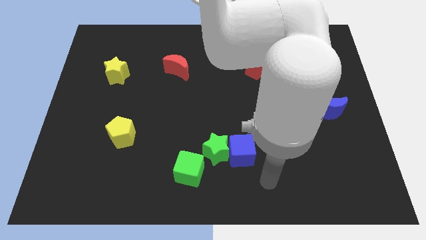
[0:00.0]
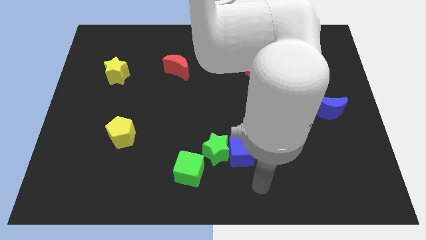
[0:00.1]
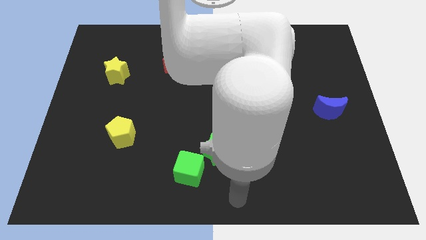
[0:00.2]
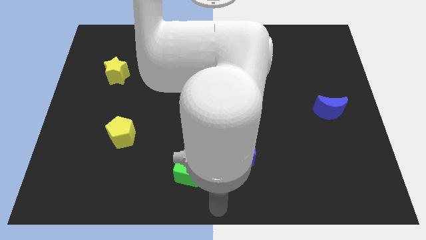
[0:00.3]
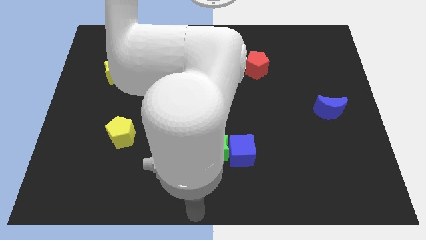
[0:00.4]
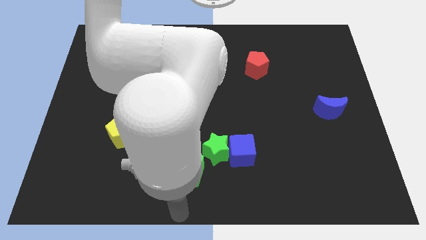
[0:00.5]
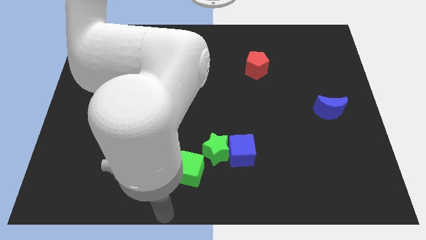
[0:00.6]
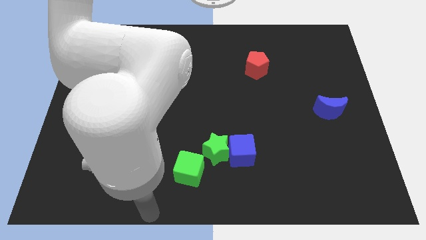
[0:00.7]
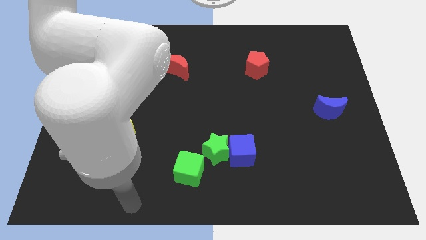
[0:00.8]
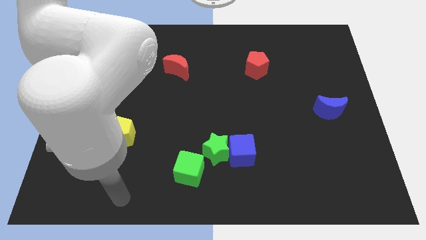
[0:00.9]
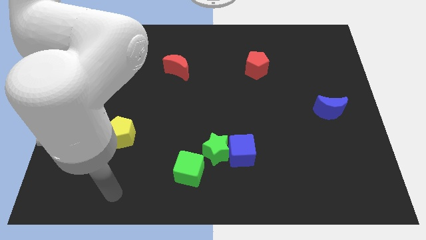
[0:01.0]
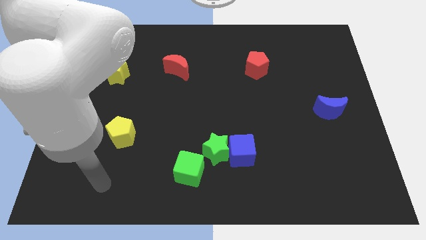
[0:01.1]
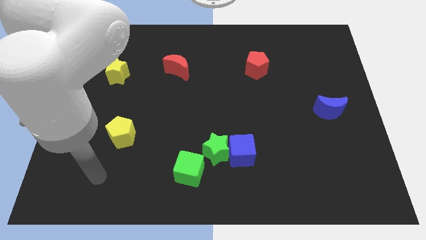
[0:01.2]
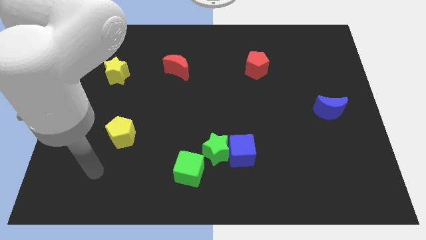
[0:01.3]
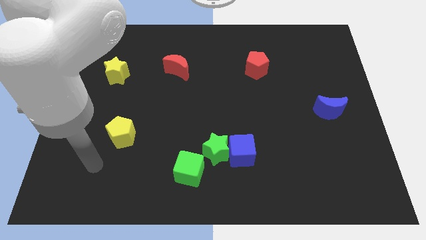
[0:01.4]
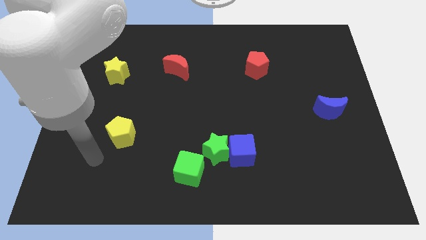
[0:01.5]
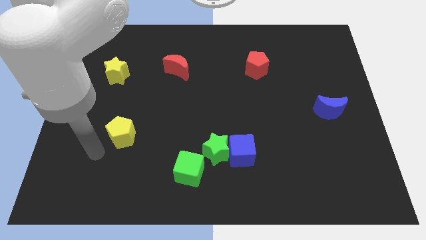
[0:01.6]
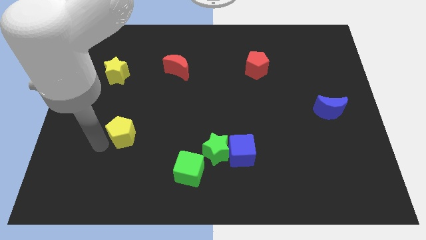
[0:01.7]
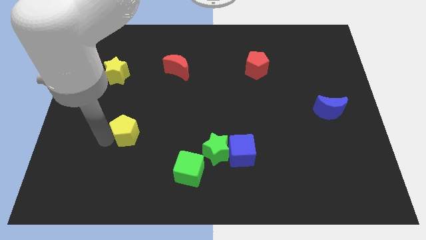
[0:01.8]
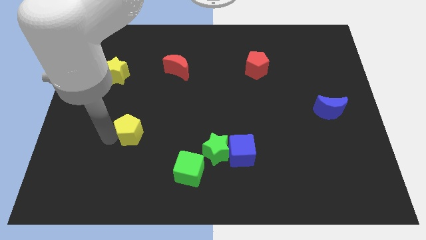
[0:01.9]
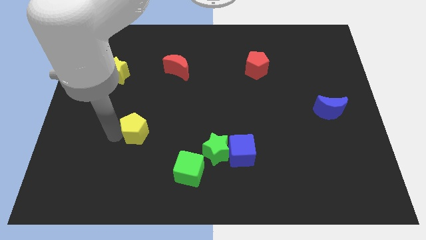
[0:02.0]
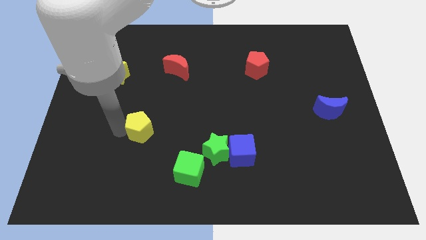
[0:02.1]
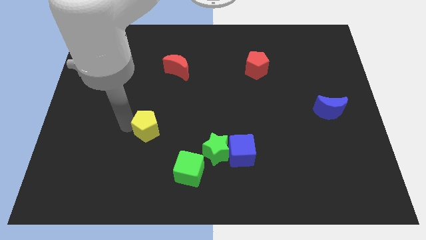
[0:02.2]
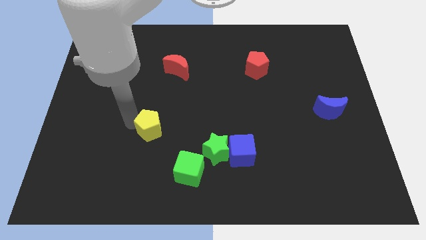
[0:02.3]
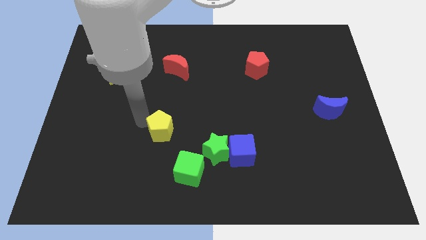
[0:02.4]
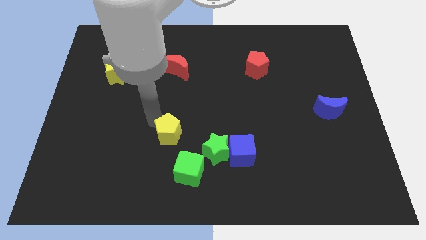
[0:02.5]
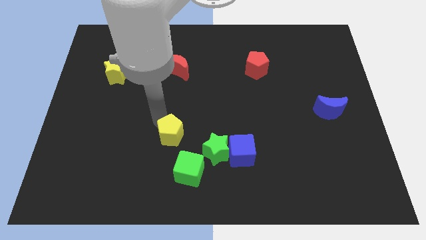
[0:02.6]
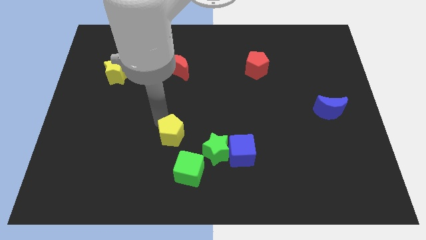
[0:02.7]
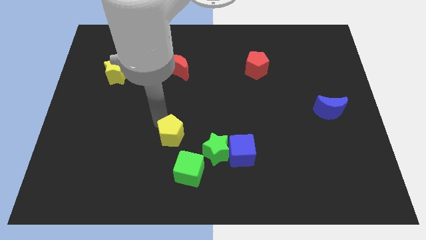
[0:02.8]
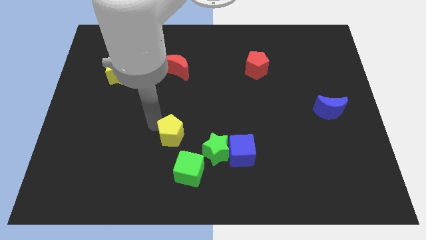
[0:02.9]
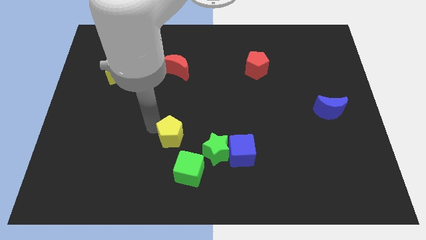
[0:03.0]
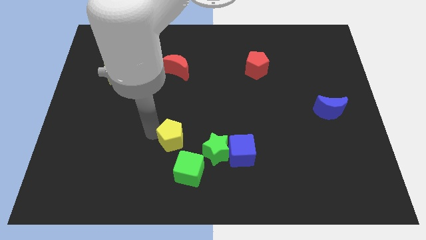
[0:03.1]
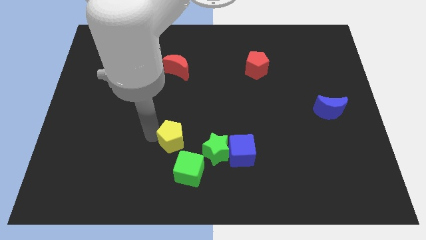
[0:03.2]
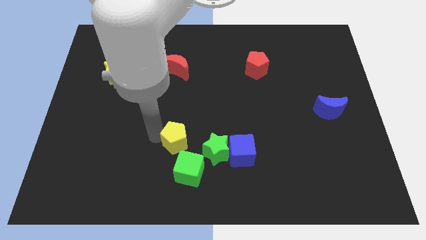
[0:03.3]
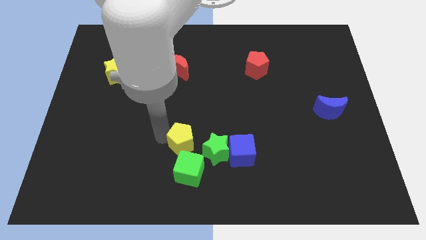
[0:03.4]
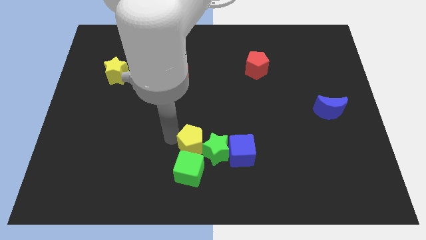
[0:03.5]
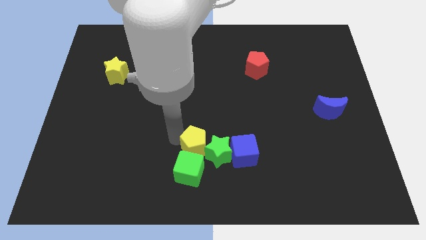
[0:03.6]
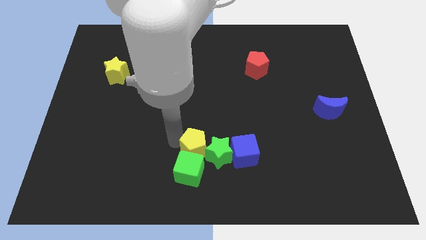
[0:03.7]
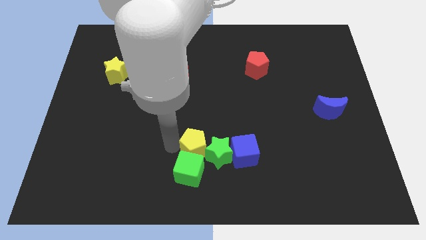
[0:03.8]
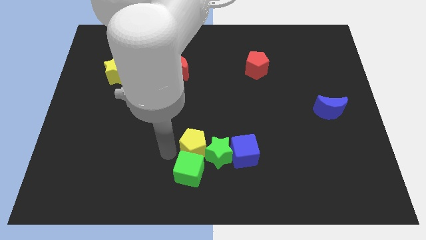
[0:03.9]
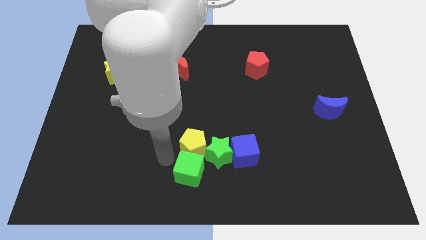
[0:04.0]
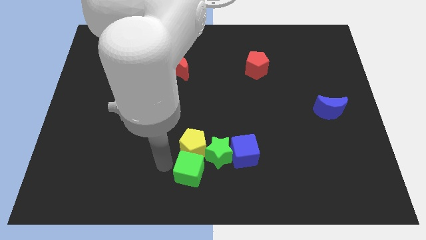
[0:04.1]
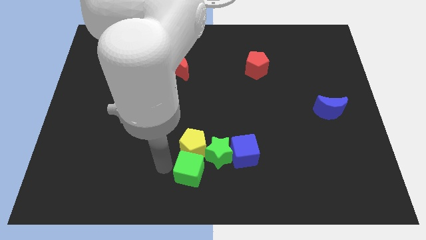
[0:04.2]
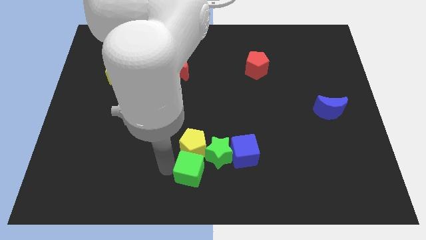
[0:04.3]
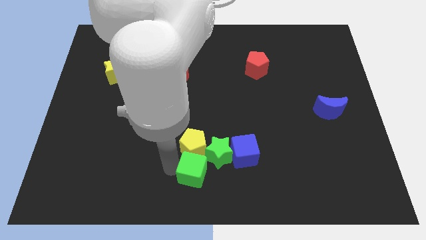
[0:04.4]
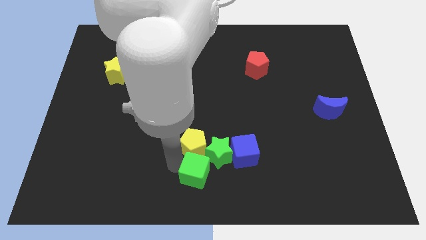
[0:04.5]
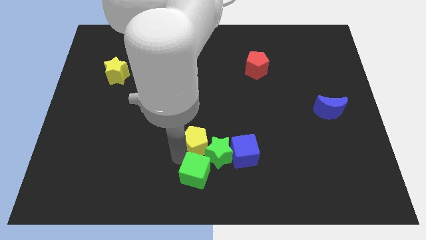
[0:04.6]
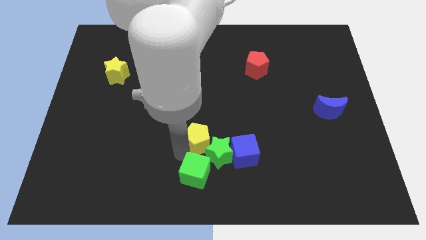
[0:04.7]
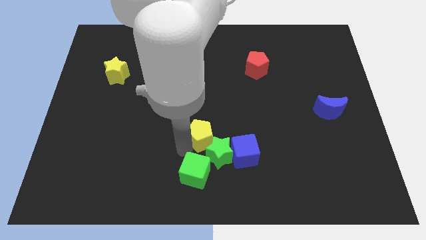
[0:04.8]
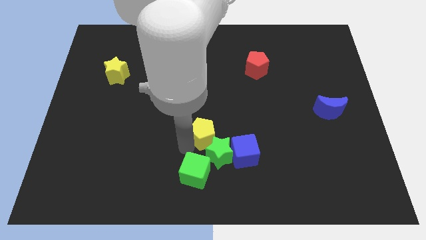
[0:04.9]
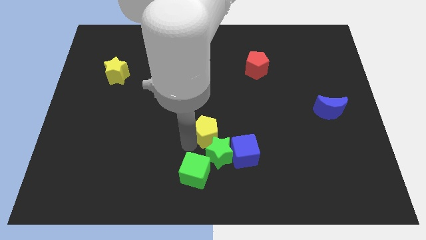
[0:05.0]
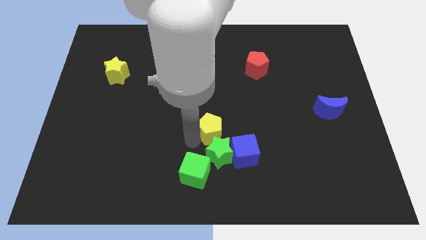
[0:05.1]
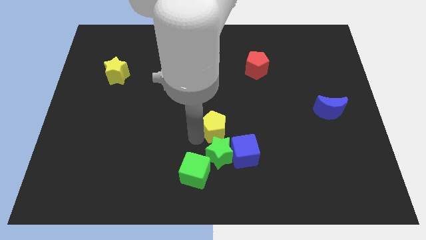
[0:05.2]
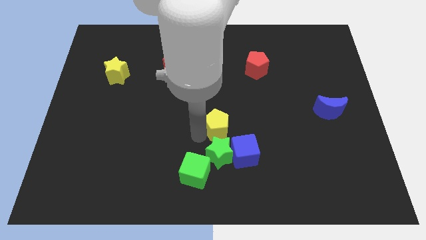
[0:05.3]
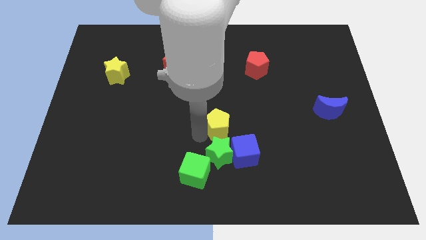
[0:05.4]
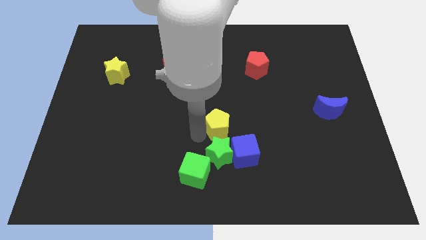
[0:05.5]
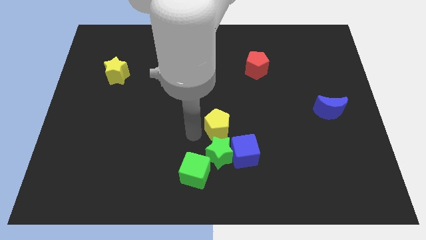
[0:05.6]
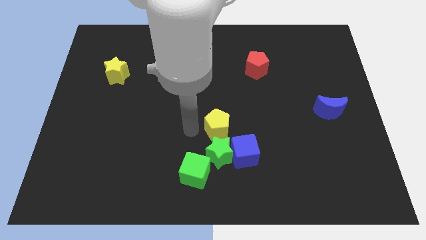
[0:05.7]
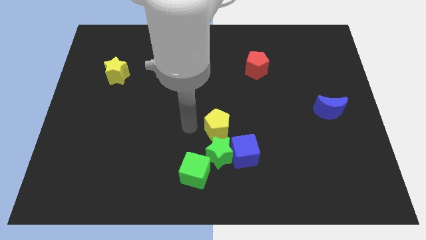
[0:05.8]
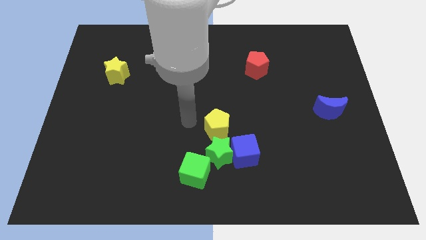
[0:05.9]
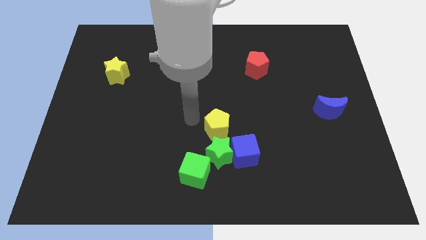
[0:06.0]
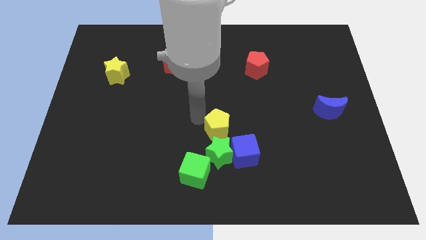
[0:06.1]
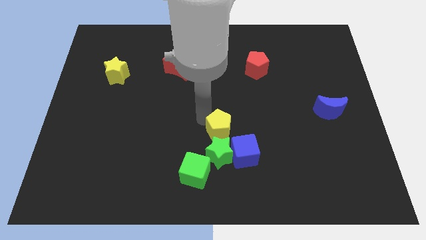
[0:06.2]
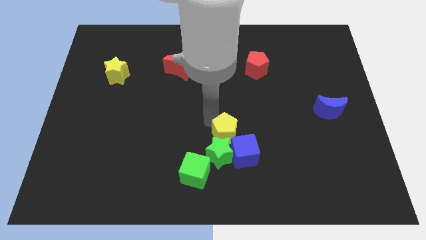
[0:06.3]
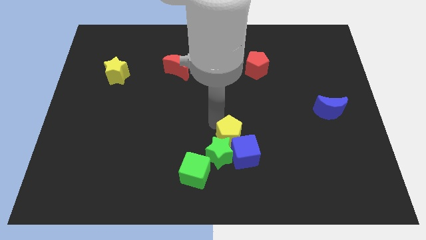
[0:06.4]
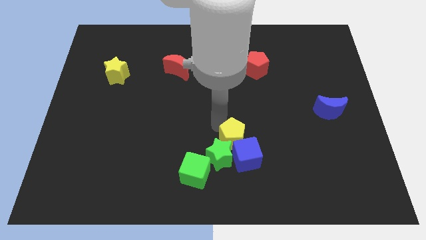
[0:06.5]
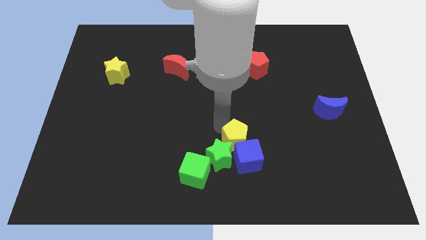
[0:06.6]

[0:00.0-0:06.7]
put the yellow pentagon towards the blue cube

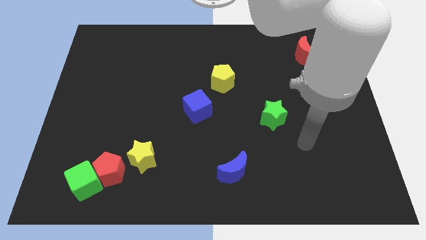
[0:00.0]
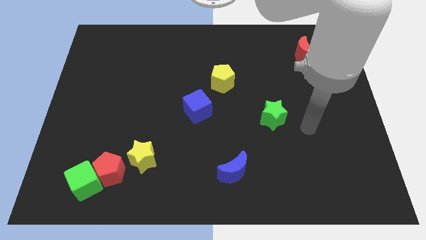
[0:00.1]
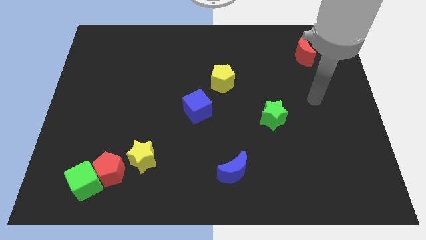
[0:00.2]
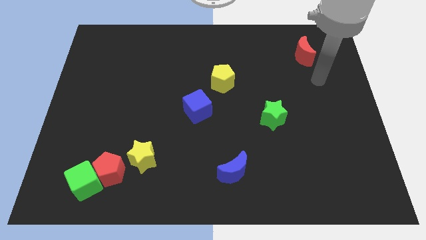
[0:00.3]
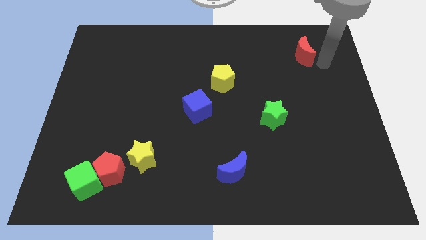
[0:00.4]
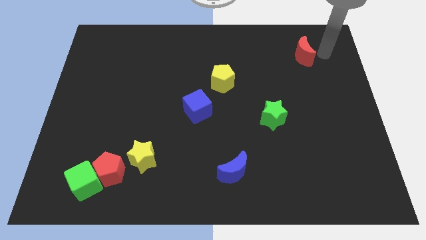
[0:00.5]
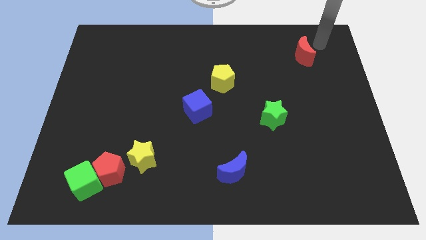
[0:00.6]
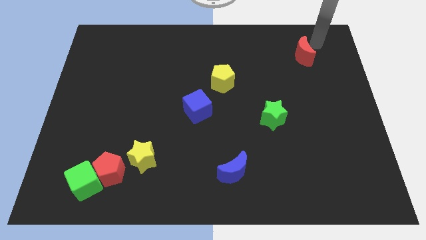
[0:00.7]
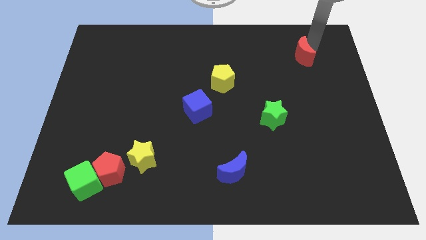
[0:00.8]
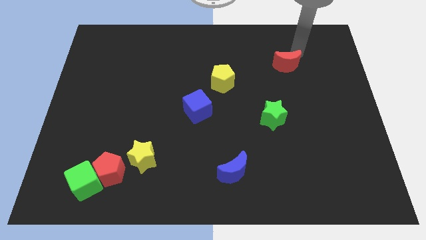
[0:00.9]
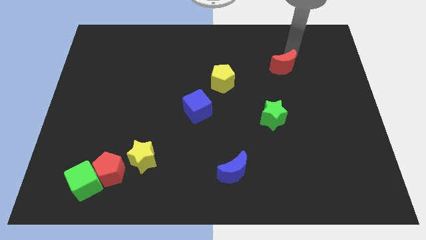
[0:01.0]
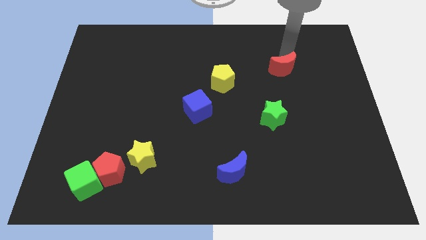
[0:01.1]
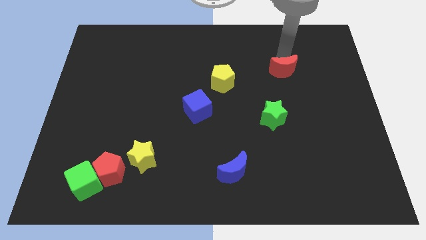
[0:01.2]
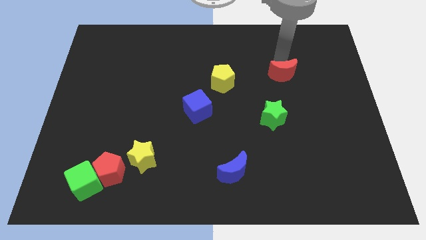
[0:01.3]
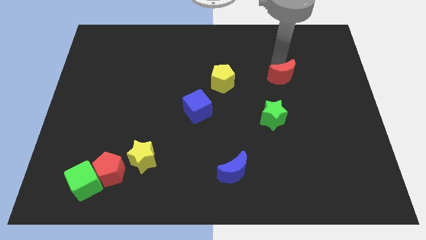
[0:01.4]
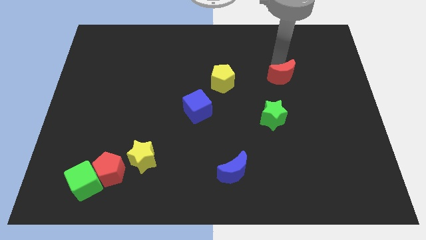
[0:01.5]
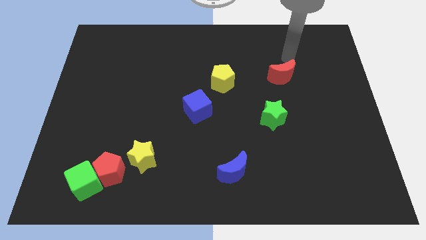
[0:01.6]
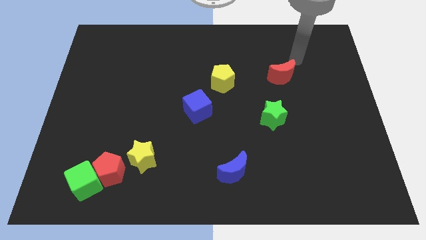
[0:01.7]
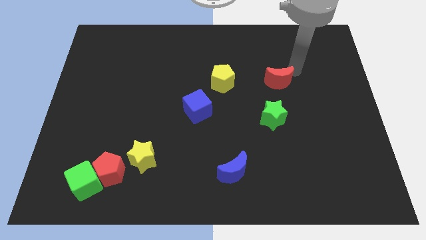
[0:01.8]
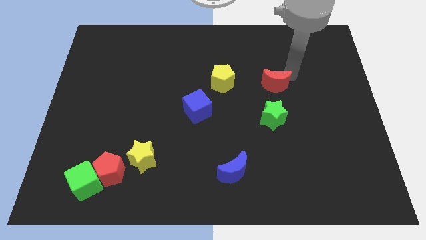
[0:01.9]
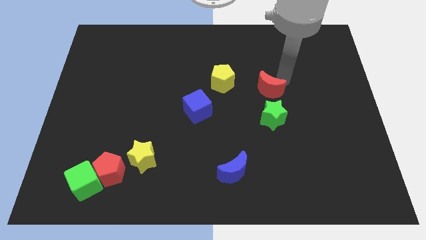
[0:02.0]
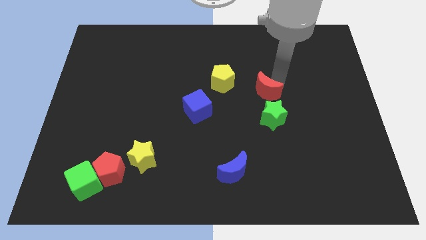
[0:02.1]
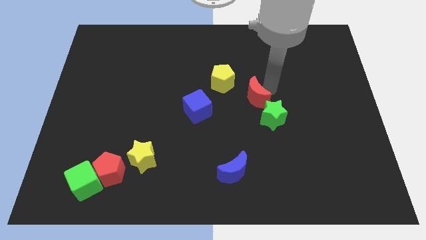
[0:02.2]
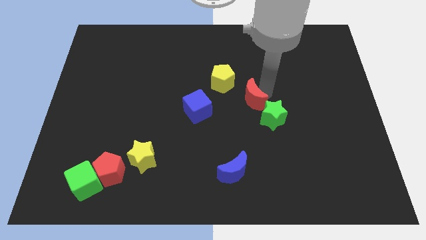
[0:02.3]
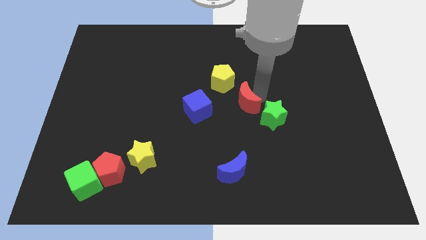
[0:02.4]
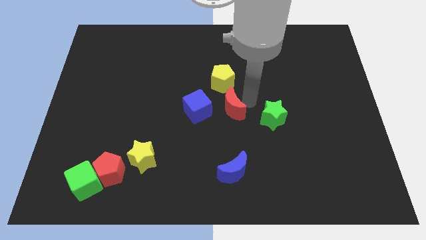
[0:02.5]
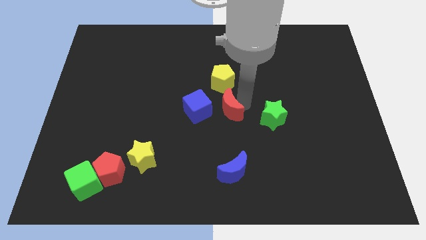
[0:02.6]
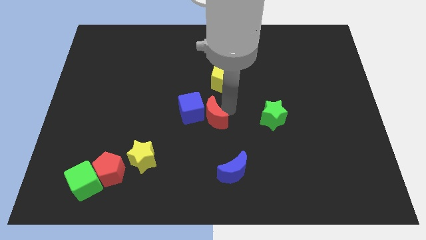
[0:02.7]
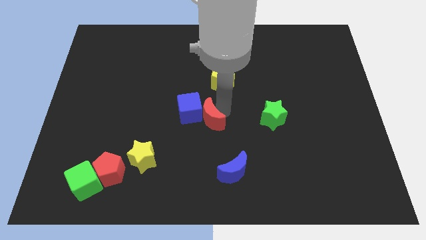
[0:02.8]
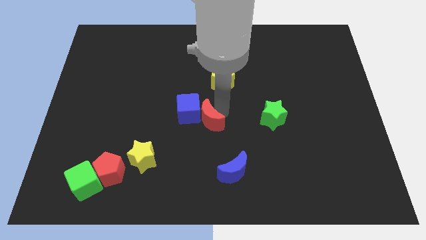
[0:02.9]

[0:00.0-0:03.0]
slide the red moon to the blue cube
